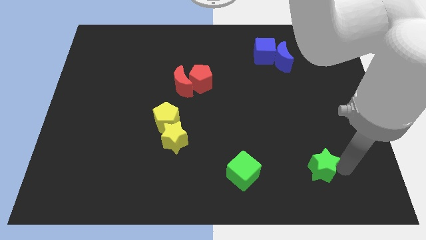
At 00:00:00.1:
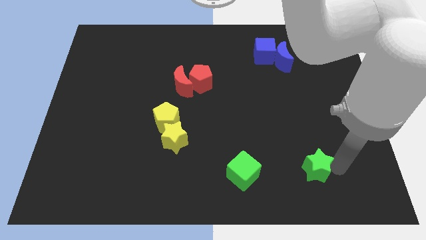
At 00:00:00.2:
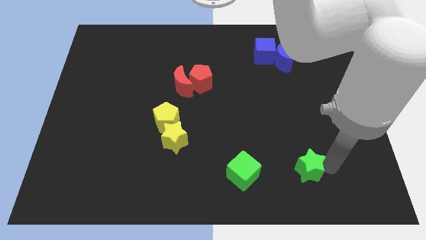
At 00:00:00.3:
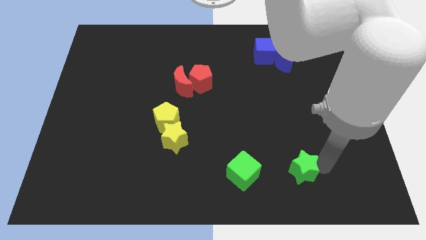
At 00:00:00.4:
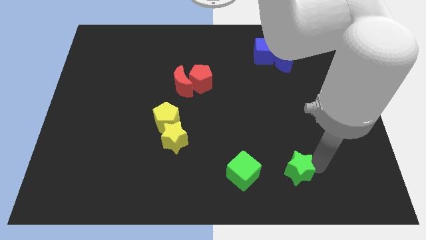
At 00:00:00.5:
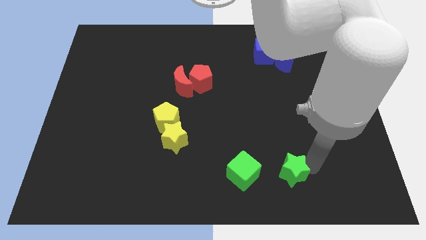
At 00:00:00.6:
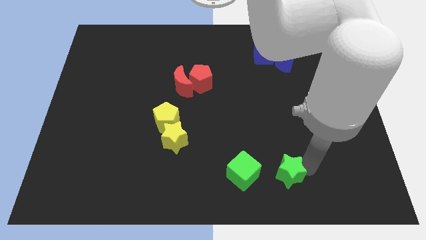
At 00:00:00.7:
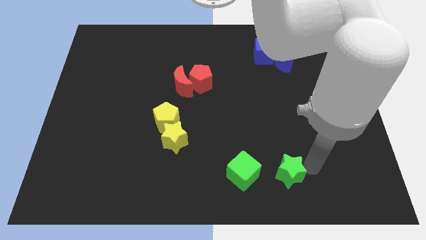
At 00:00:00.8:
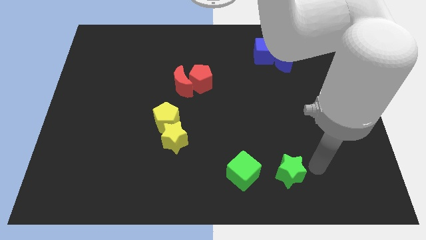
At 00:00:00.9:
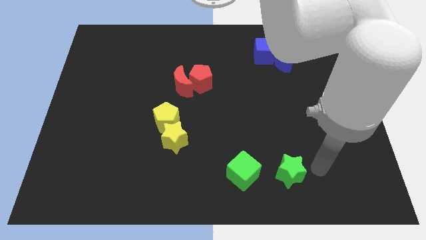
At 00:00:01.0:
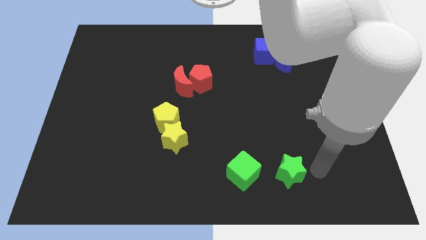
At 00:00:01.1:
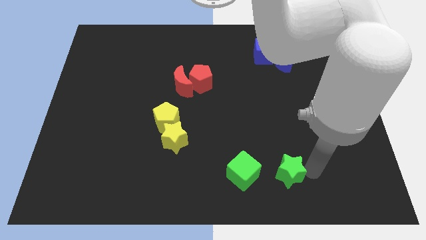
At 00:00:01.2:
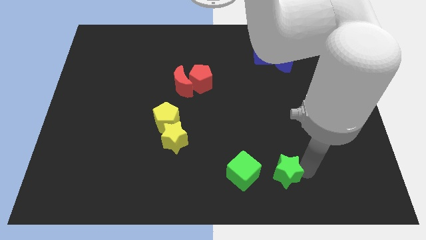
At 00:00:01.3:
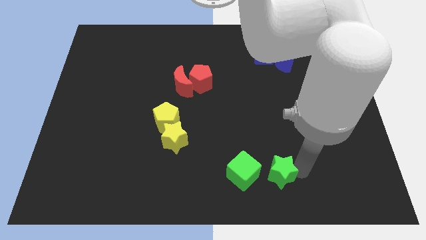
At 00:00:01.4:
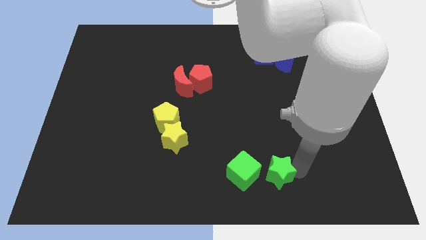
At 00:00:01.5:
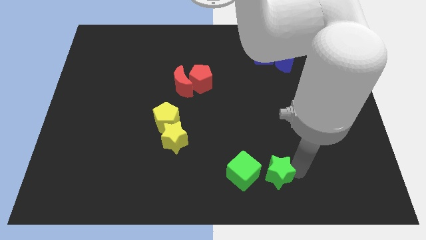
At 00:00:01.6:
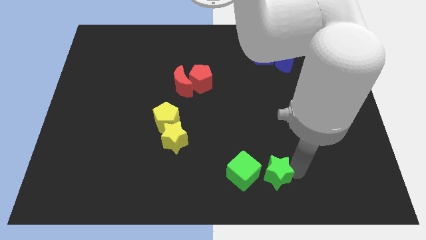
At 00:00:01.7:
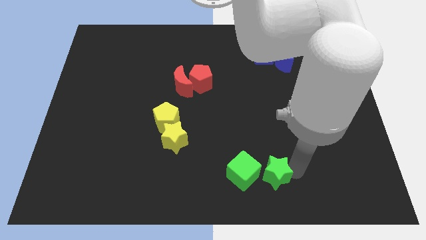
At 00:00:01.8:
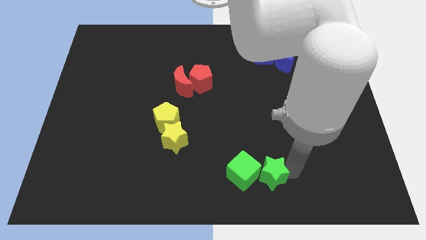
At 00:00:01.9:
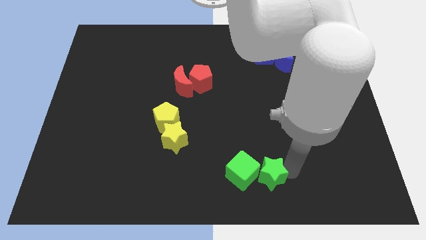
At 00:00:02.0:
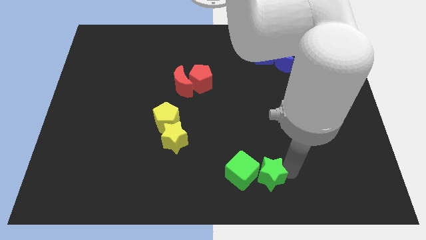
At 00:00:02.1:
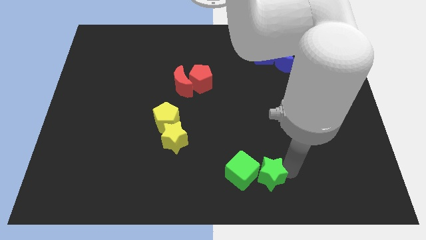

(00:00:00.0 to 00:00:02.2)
place the green star to the right of green cube

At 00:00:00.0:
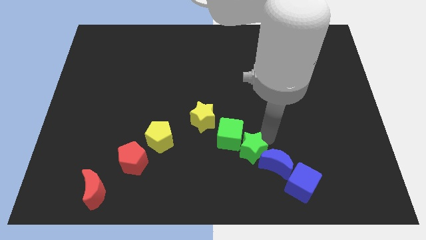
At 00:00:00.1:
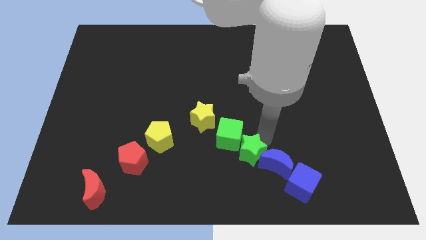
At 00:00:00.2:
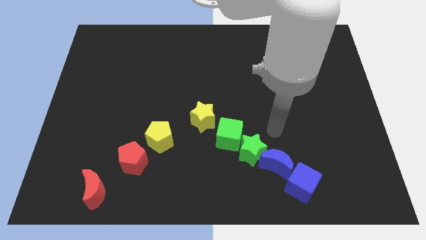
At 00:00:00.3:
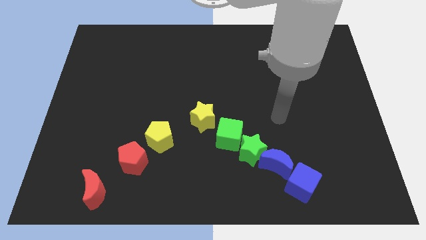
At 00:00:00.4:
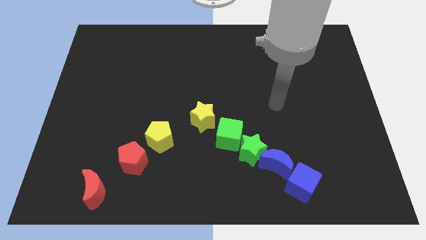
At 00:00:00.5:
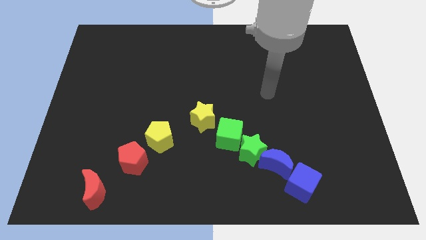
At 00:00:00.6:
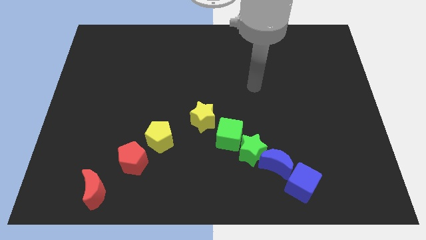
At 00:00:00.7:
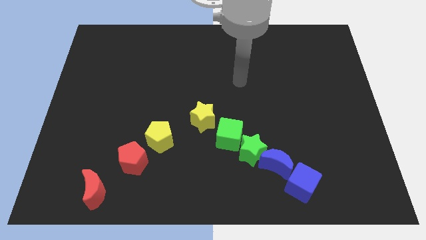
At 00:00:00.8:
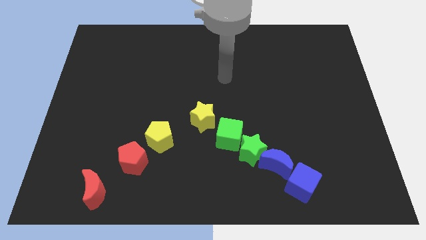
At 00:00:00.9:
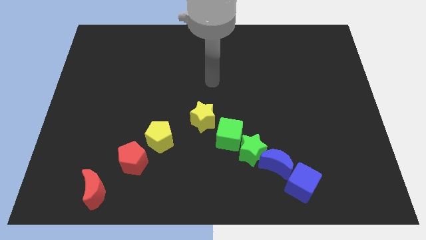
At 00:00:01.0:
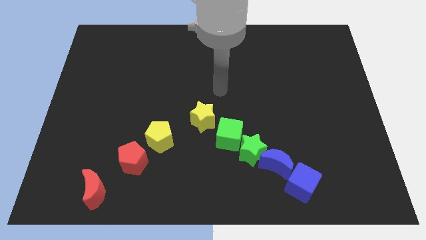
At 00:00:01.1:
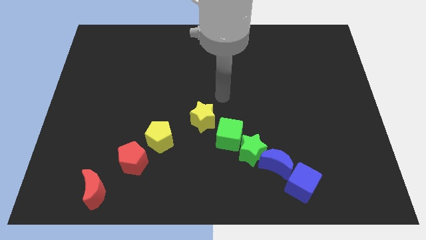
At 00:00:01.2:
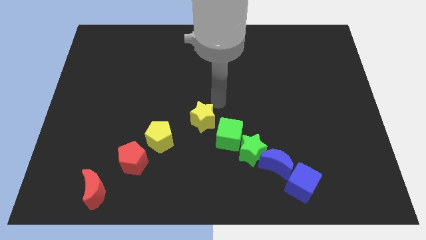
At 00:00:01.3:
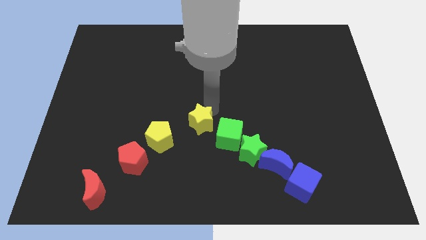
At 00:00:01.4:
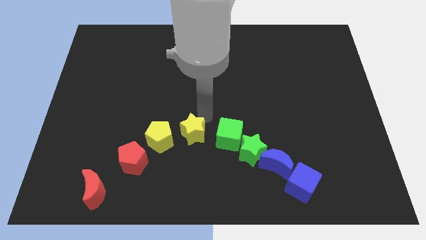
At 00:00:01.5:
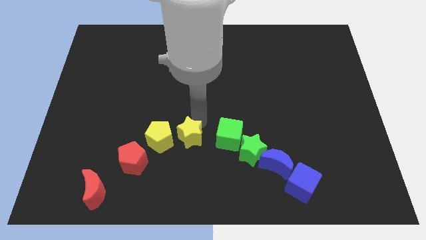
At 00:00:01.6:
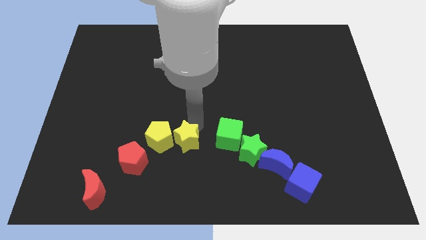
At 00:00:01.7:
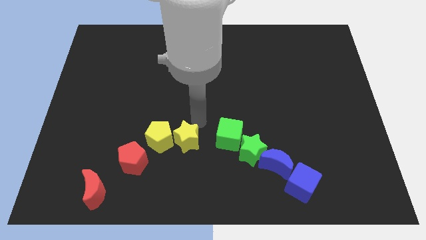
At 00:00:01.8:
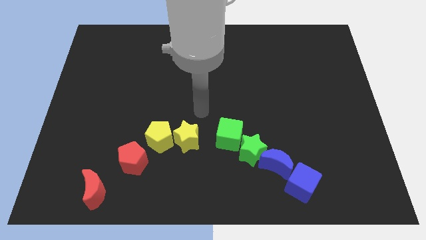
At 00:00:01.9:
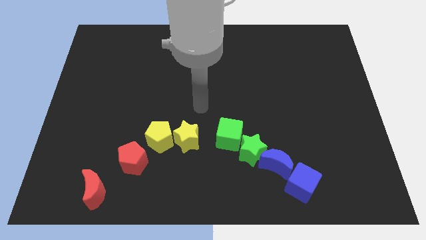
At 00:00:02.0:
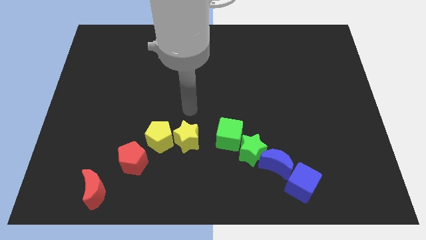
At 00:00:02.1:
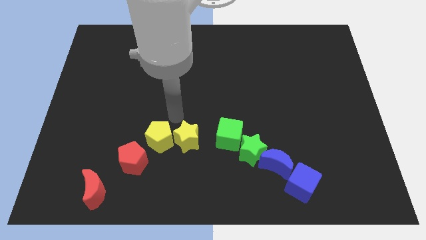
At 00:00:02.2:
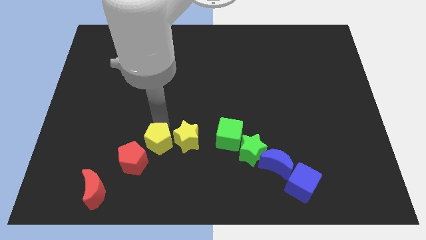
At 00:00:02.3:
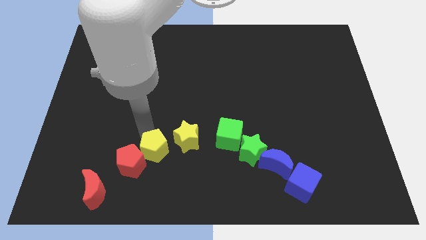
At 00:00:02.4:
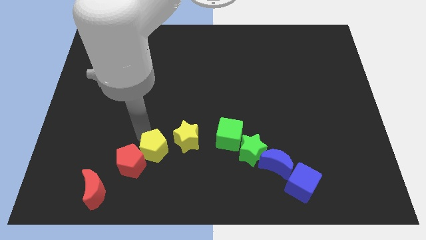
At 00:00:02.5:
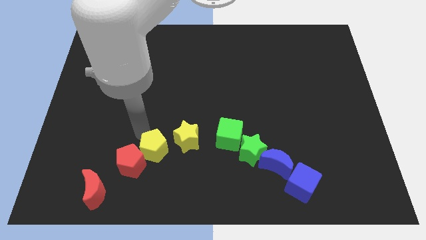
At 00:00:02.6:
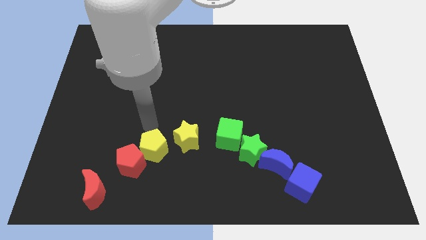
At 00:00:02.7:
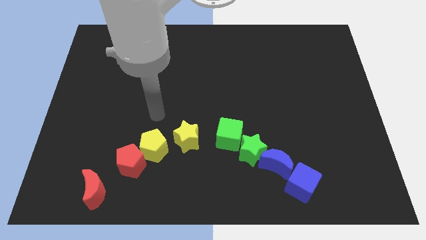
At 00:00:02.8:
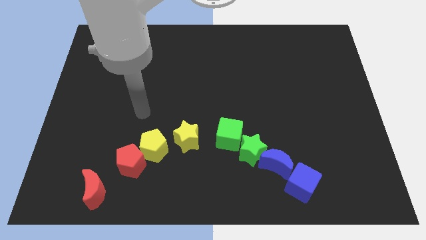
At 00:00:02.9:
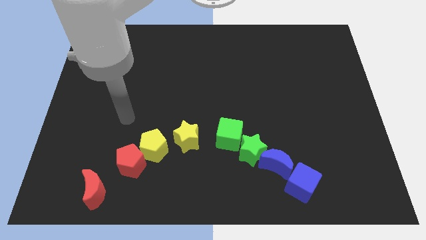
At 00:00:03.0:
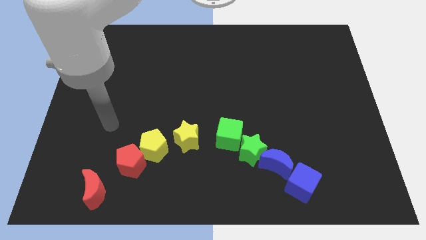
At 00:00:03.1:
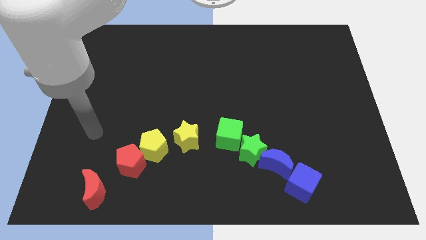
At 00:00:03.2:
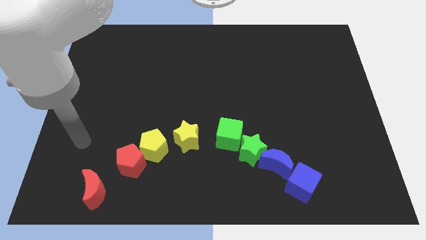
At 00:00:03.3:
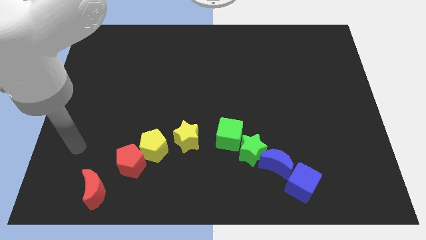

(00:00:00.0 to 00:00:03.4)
push the yellow star and yellow pentagon slightly towards the bottom of the board

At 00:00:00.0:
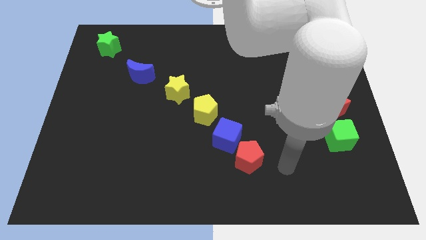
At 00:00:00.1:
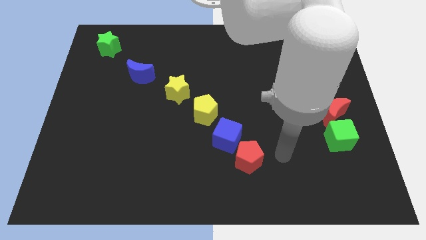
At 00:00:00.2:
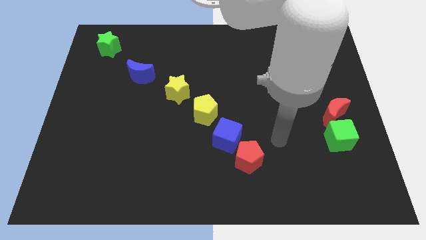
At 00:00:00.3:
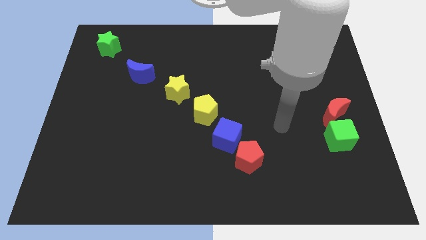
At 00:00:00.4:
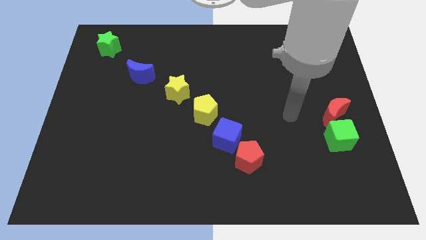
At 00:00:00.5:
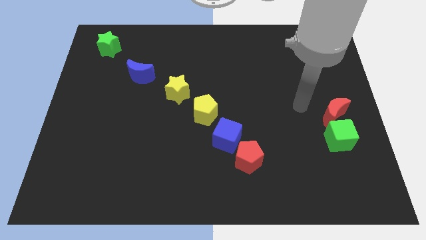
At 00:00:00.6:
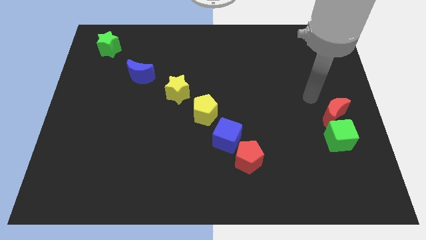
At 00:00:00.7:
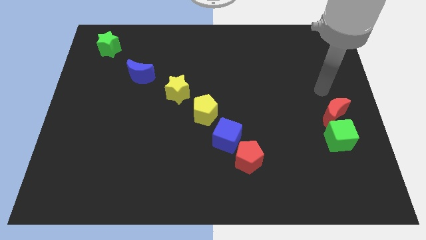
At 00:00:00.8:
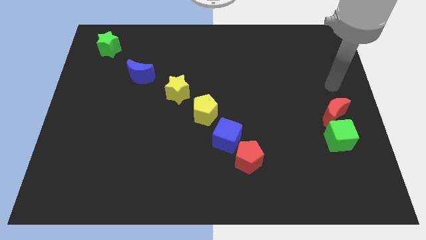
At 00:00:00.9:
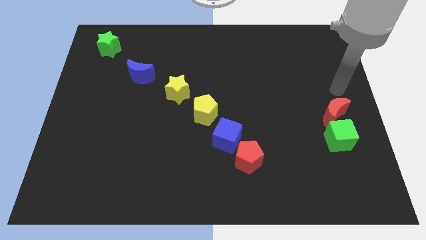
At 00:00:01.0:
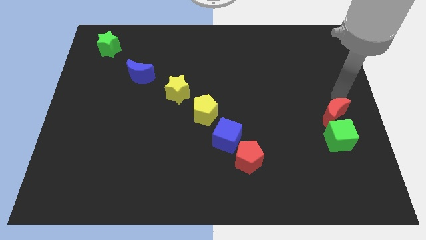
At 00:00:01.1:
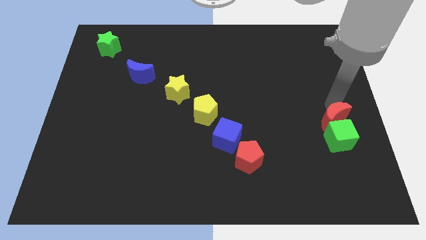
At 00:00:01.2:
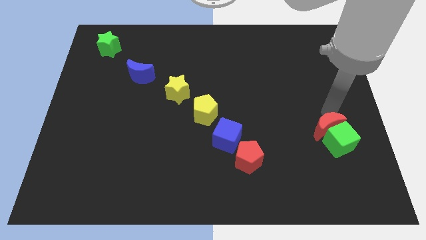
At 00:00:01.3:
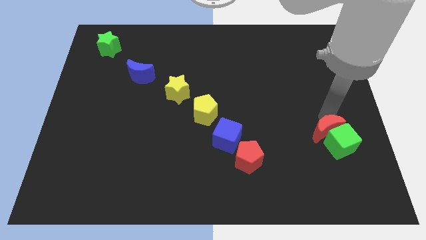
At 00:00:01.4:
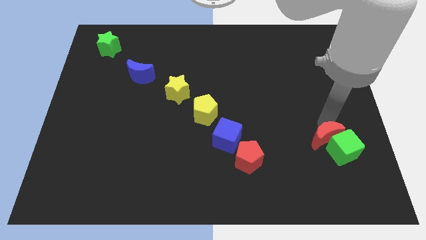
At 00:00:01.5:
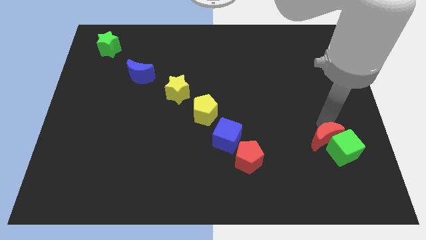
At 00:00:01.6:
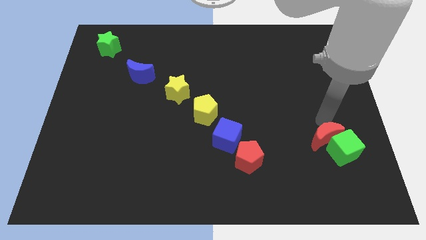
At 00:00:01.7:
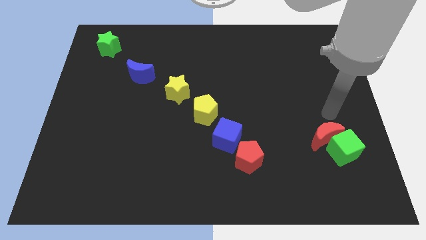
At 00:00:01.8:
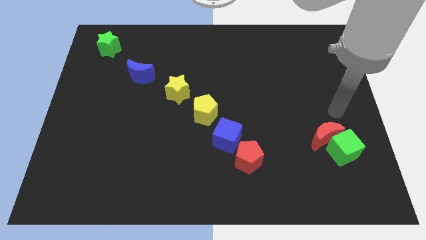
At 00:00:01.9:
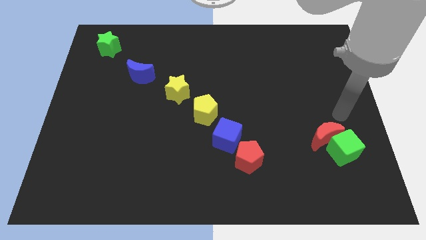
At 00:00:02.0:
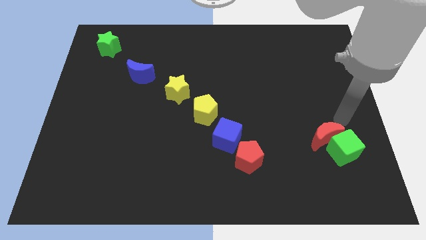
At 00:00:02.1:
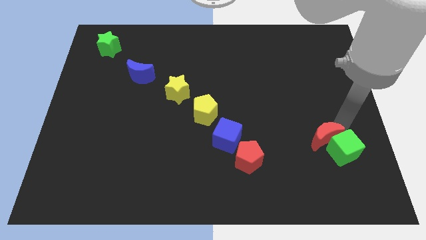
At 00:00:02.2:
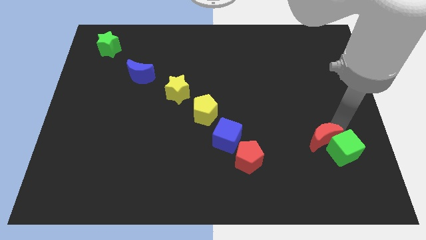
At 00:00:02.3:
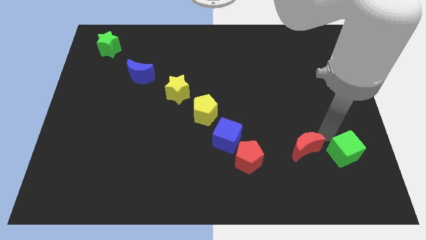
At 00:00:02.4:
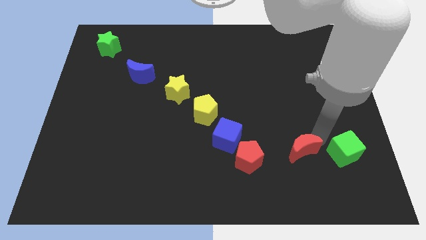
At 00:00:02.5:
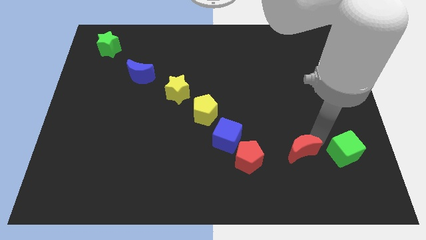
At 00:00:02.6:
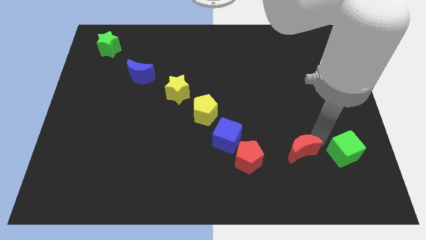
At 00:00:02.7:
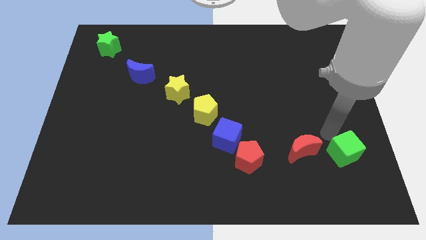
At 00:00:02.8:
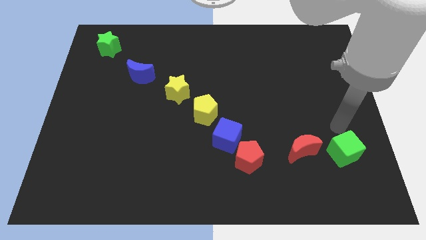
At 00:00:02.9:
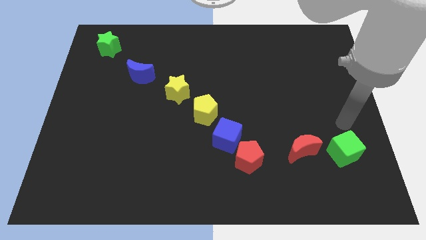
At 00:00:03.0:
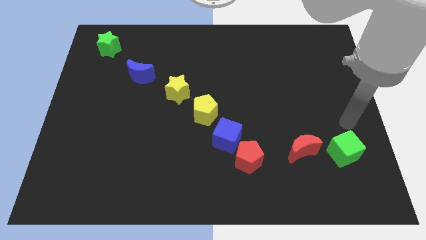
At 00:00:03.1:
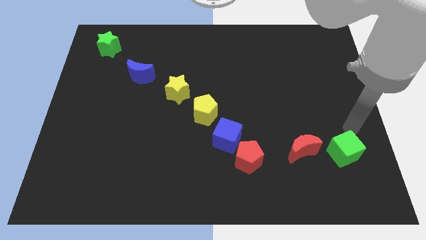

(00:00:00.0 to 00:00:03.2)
place the red moon left to the green cube
